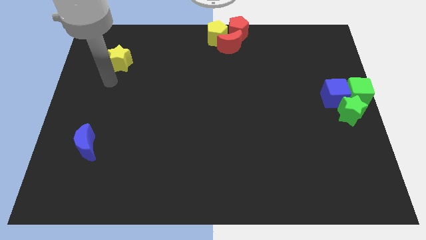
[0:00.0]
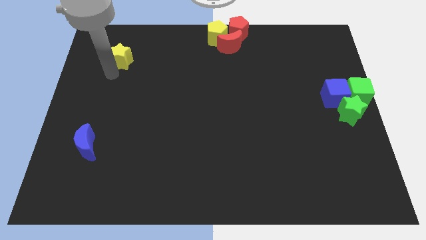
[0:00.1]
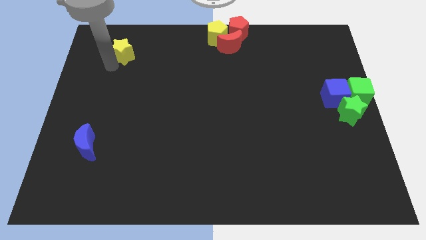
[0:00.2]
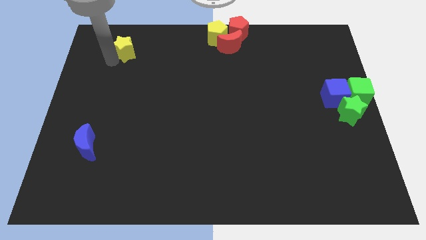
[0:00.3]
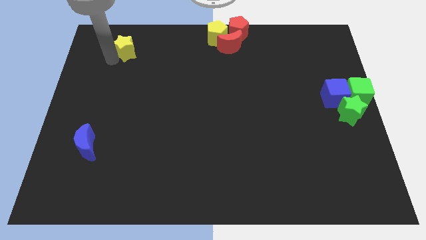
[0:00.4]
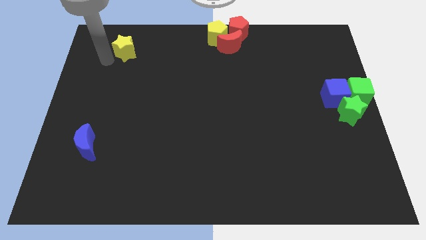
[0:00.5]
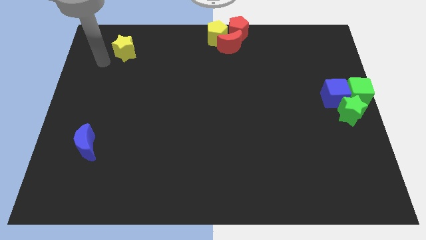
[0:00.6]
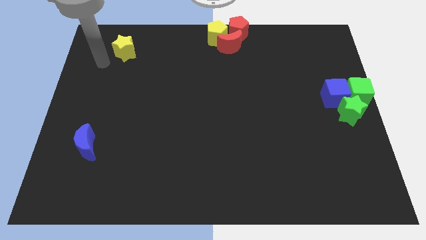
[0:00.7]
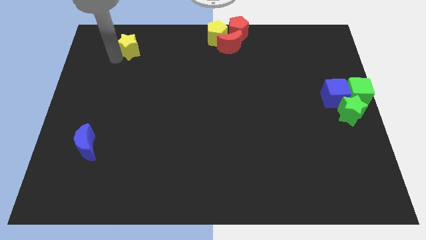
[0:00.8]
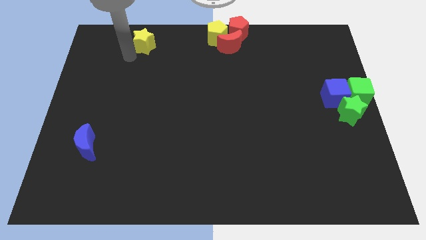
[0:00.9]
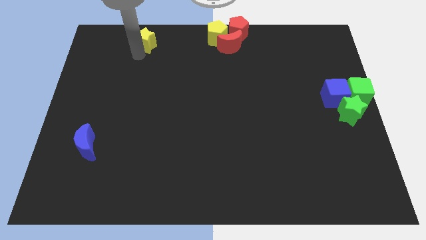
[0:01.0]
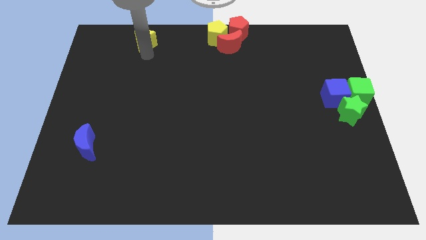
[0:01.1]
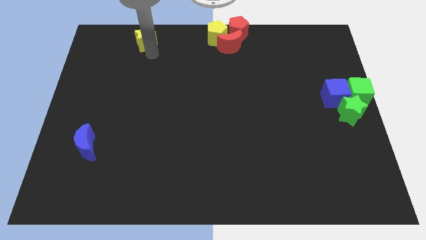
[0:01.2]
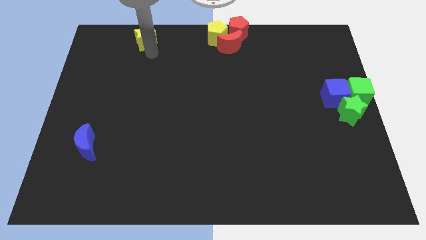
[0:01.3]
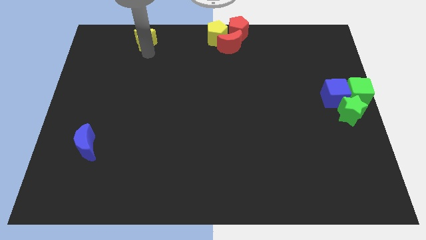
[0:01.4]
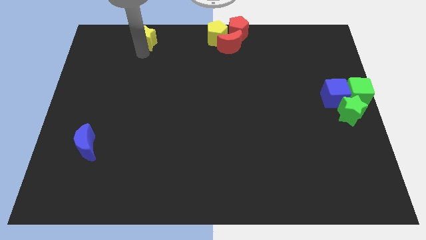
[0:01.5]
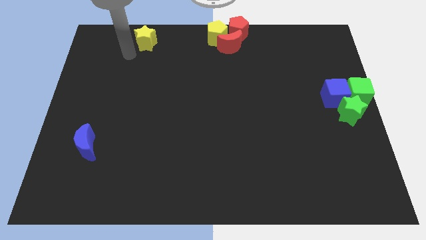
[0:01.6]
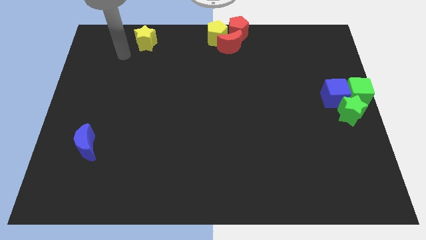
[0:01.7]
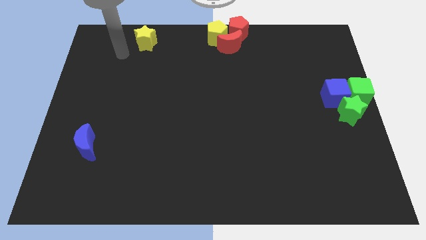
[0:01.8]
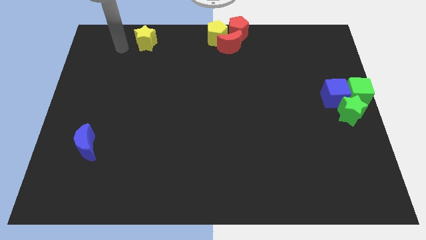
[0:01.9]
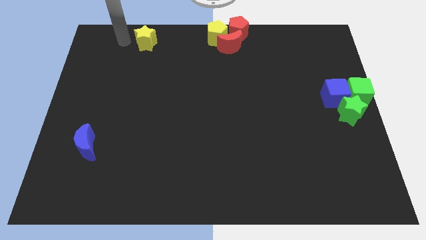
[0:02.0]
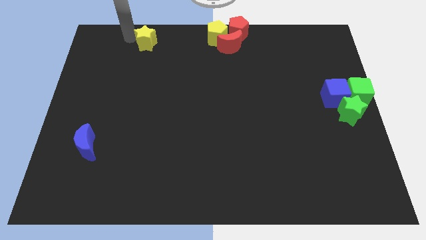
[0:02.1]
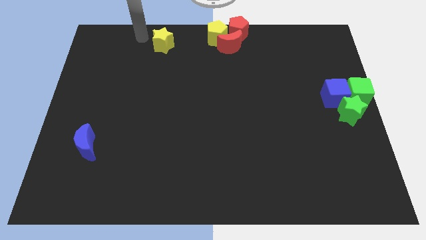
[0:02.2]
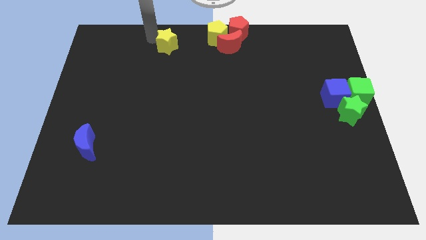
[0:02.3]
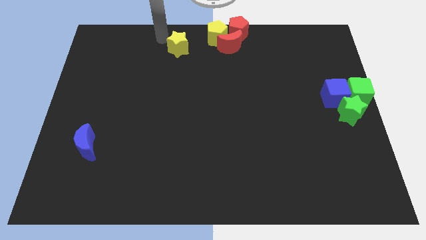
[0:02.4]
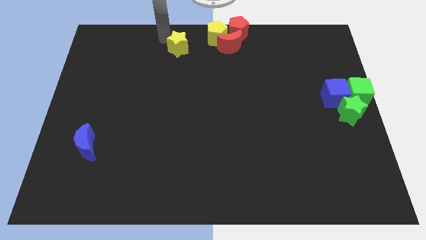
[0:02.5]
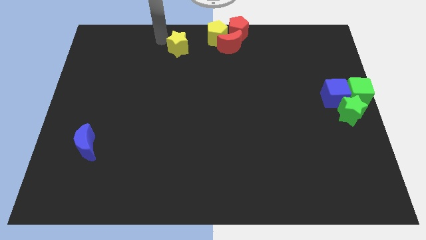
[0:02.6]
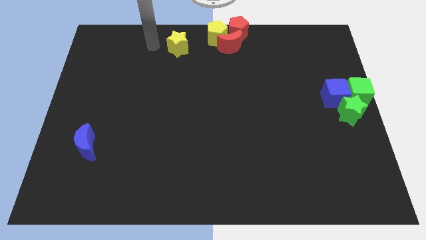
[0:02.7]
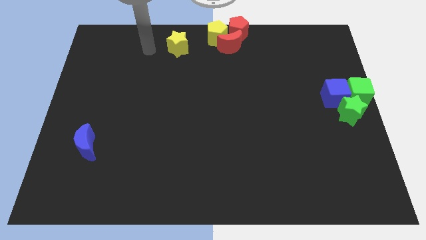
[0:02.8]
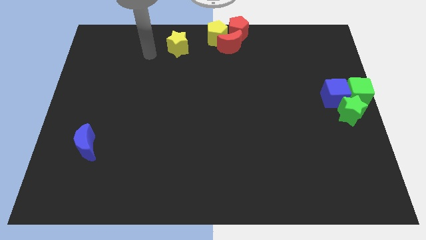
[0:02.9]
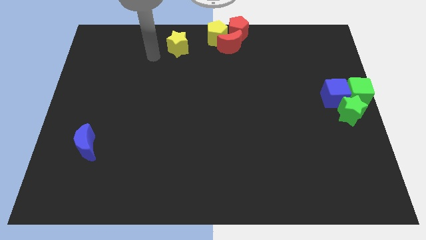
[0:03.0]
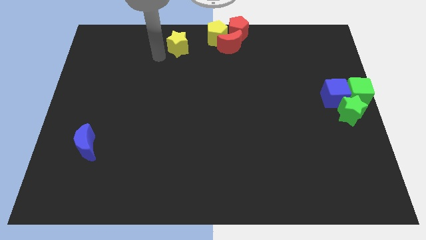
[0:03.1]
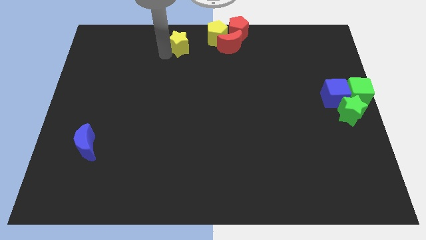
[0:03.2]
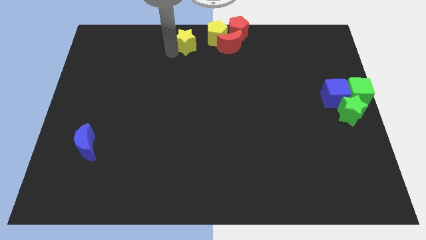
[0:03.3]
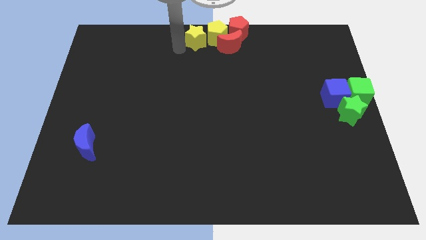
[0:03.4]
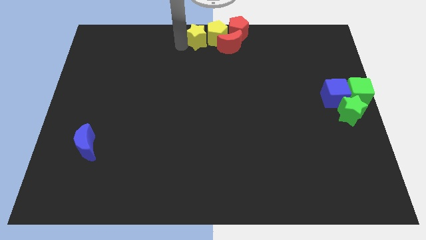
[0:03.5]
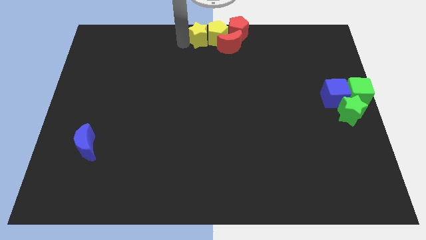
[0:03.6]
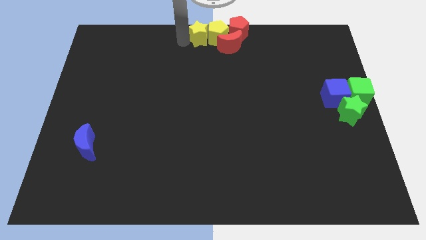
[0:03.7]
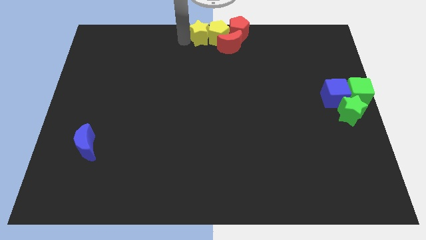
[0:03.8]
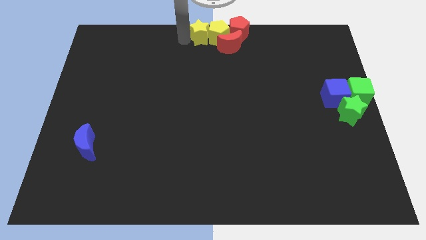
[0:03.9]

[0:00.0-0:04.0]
move the yellow star into the yellow pentagon

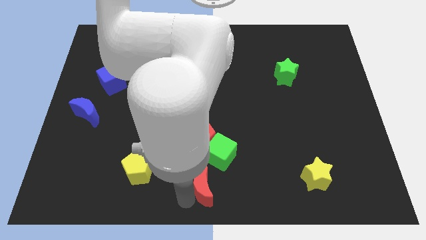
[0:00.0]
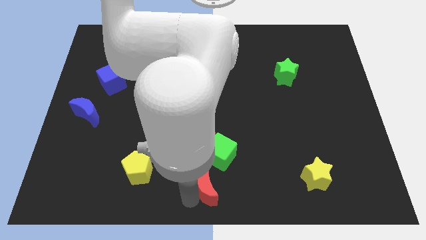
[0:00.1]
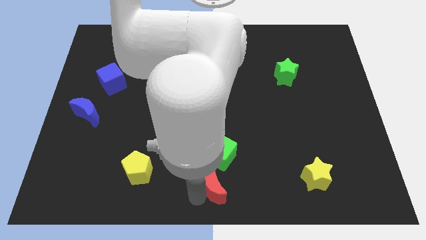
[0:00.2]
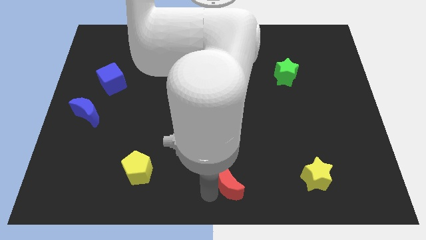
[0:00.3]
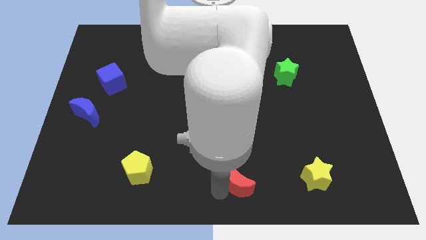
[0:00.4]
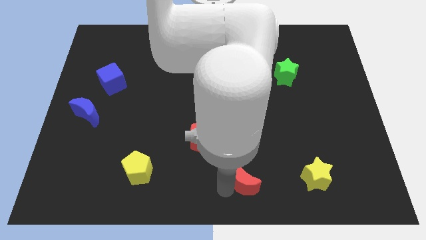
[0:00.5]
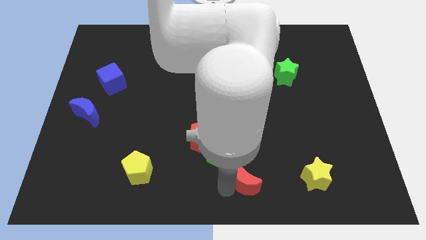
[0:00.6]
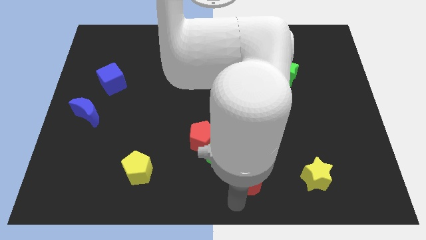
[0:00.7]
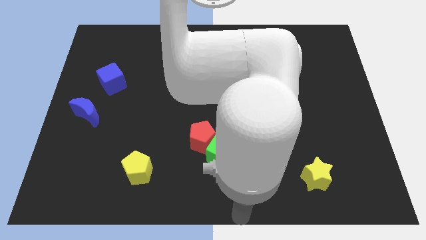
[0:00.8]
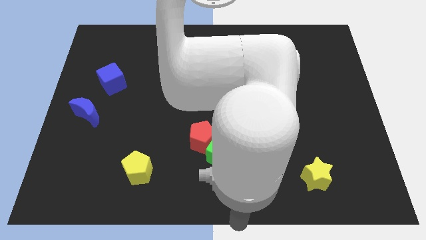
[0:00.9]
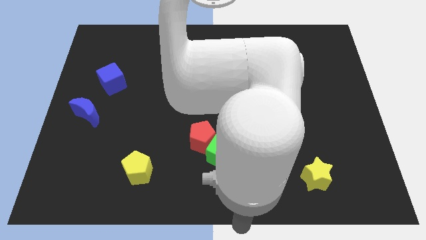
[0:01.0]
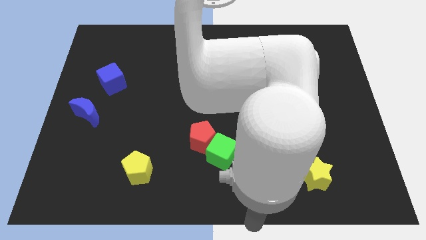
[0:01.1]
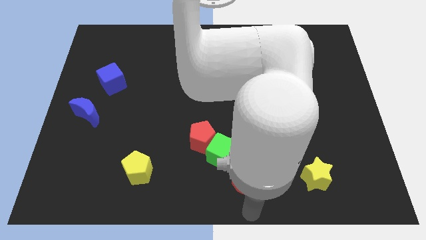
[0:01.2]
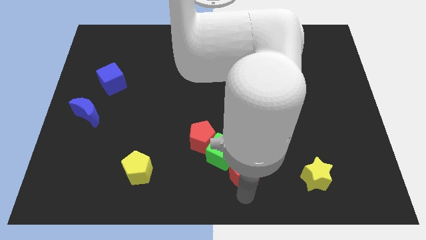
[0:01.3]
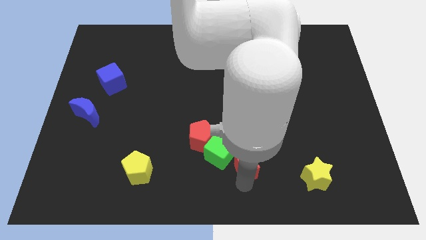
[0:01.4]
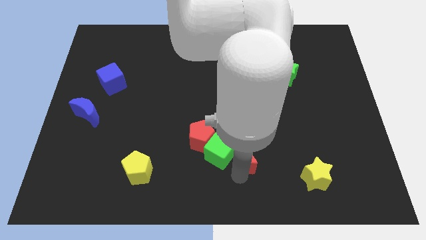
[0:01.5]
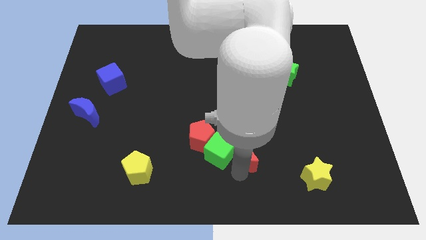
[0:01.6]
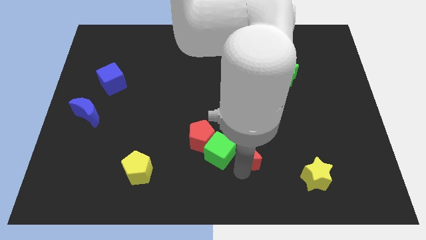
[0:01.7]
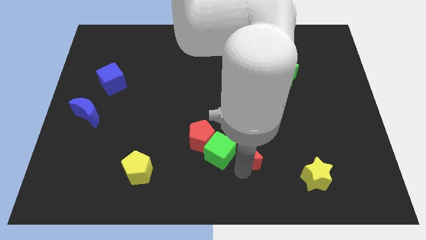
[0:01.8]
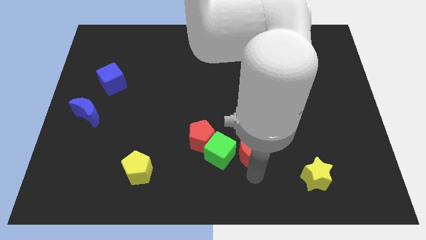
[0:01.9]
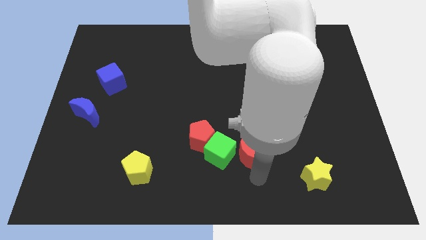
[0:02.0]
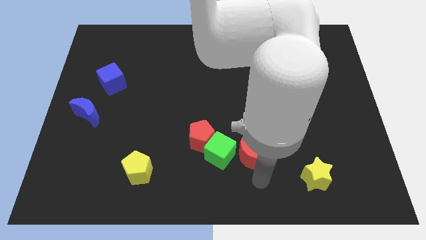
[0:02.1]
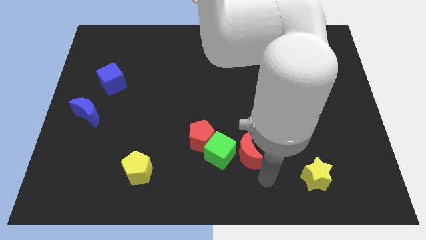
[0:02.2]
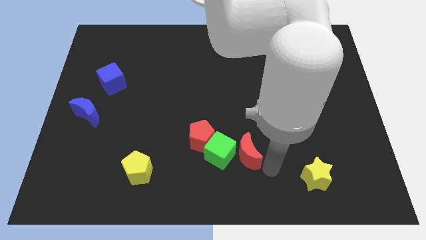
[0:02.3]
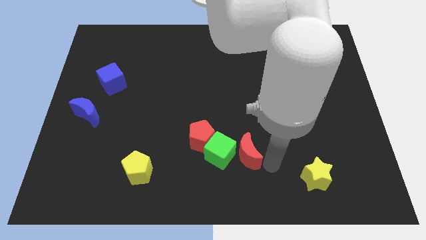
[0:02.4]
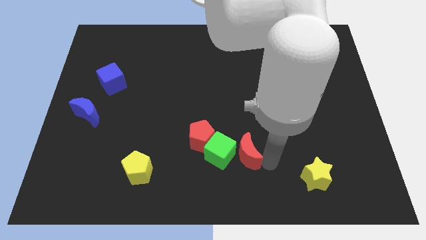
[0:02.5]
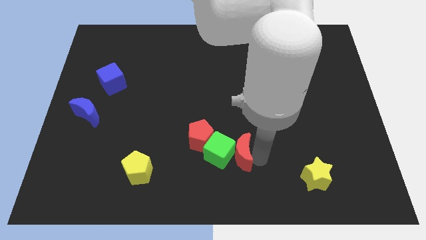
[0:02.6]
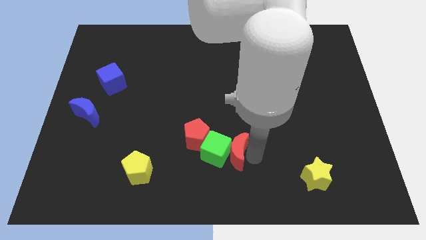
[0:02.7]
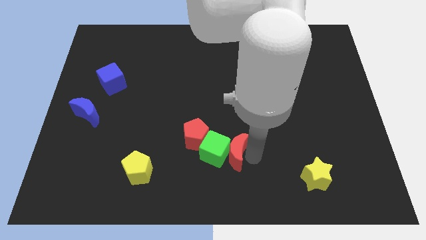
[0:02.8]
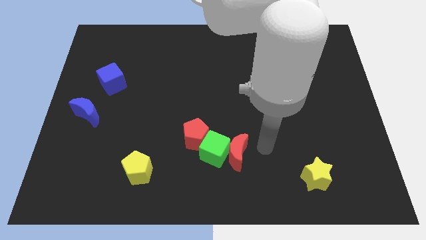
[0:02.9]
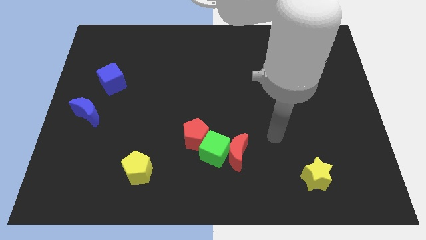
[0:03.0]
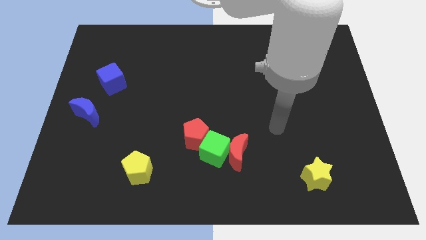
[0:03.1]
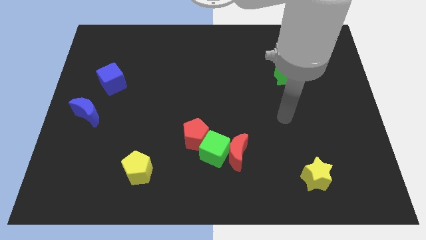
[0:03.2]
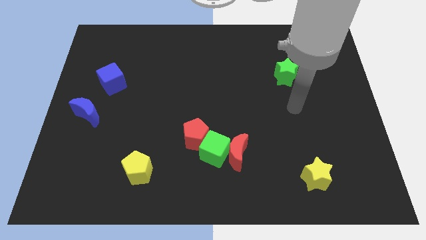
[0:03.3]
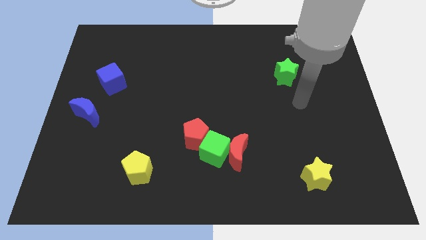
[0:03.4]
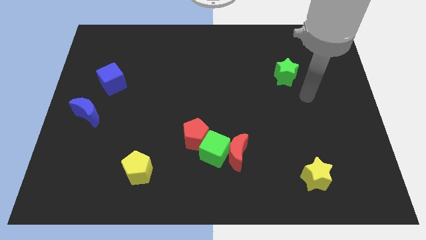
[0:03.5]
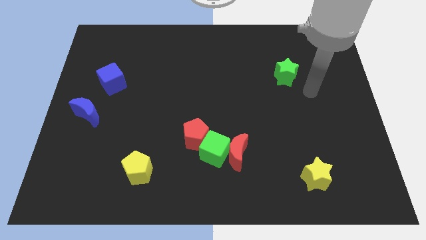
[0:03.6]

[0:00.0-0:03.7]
drag the red moon to the right side of the green cube

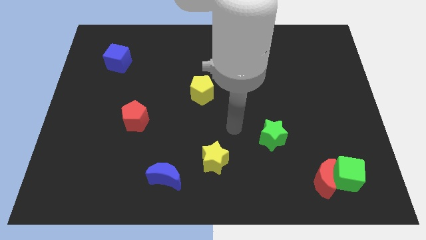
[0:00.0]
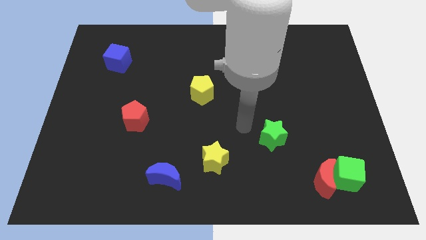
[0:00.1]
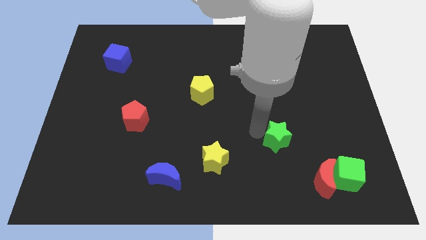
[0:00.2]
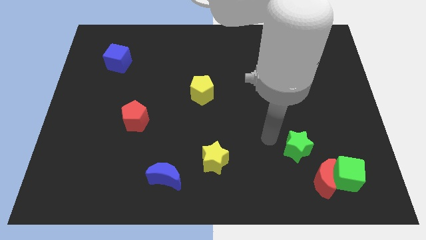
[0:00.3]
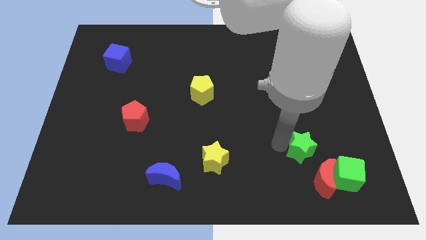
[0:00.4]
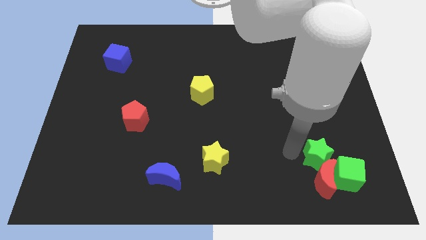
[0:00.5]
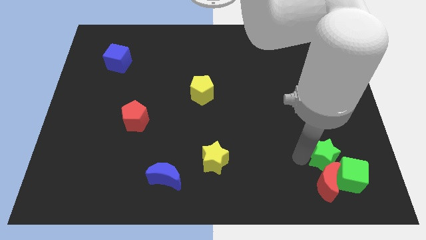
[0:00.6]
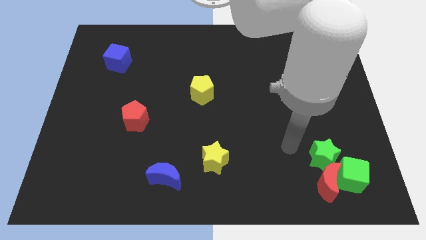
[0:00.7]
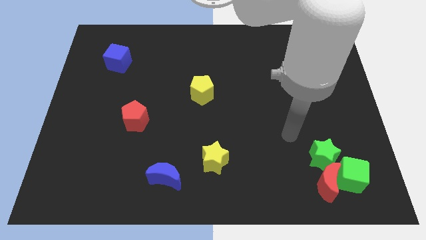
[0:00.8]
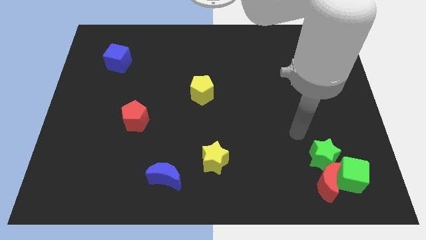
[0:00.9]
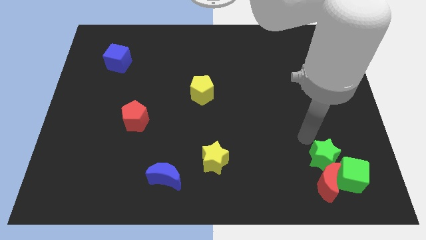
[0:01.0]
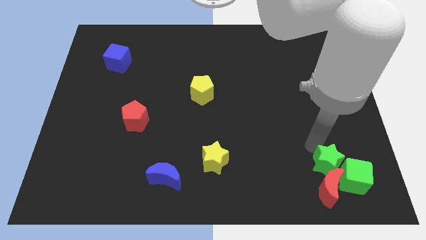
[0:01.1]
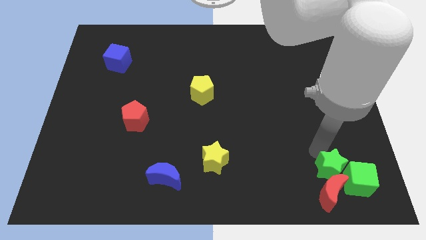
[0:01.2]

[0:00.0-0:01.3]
push the green star into the green cube
